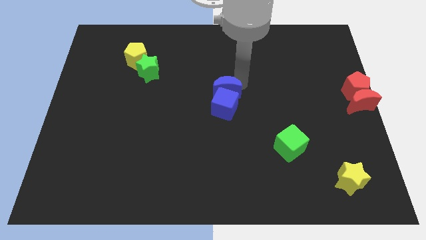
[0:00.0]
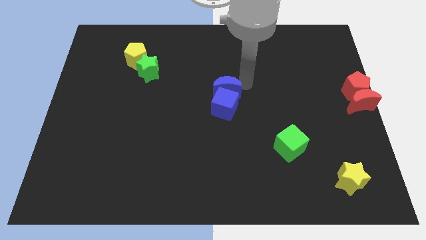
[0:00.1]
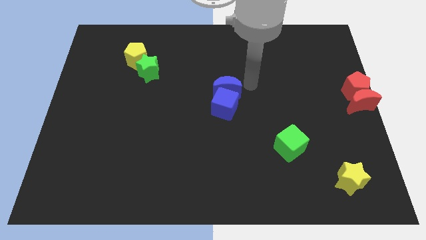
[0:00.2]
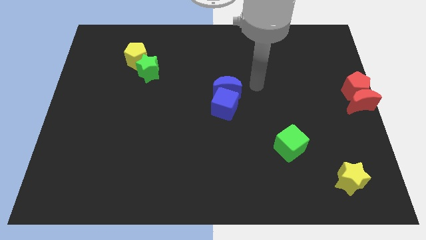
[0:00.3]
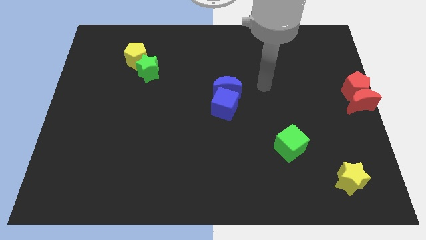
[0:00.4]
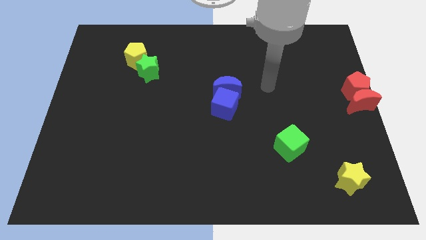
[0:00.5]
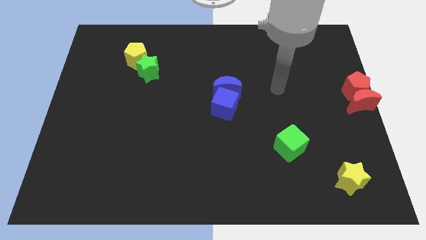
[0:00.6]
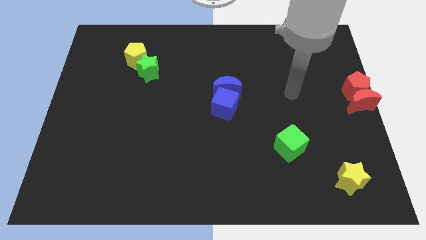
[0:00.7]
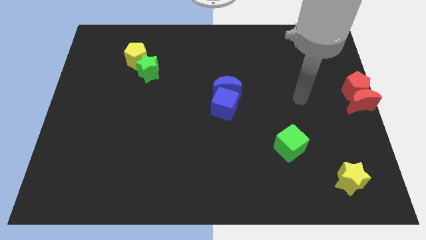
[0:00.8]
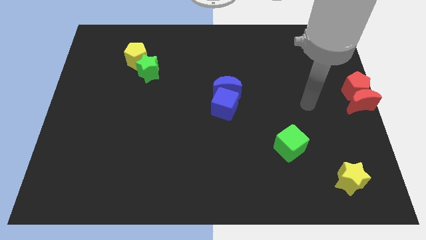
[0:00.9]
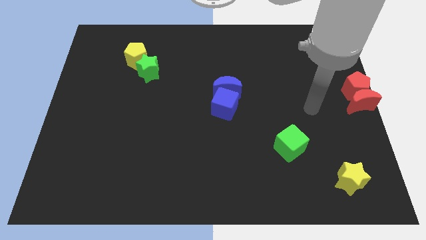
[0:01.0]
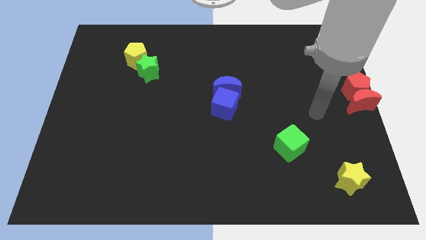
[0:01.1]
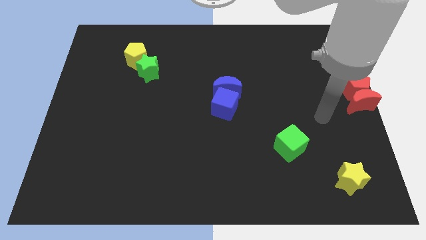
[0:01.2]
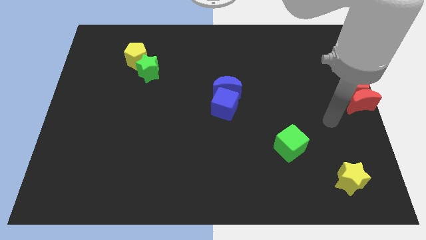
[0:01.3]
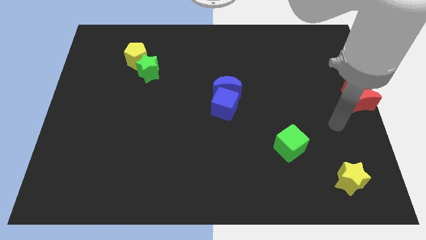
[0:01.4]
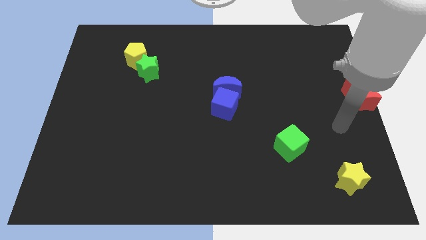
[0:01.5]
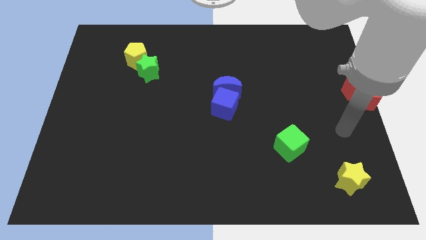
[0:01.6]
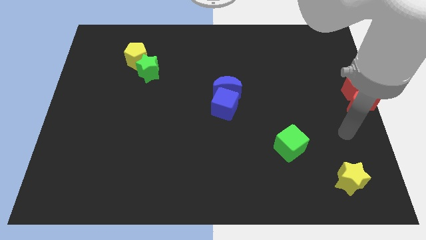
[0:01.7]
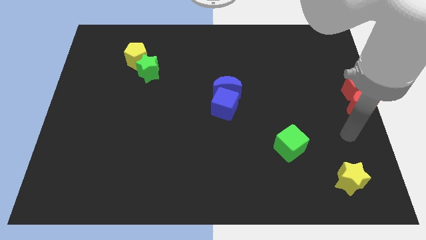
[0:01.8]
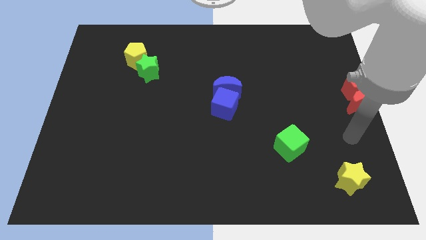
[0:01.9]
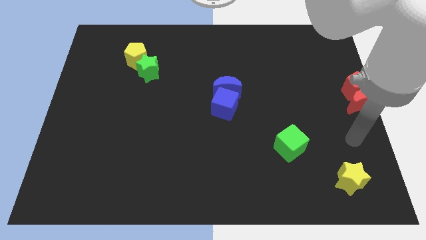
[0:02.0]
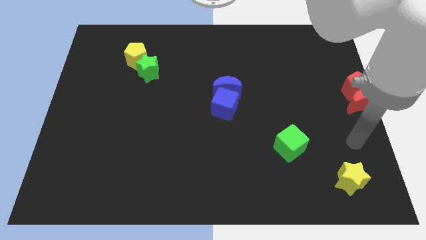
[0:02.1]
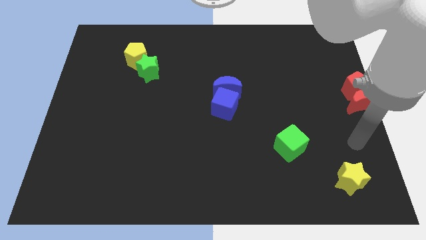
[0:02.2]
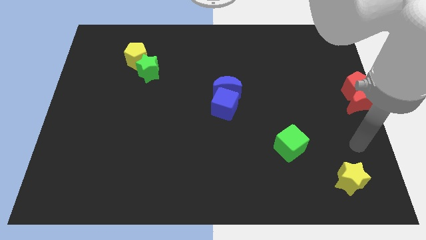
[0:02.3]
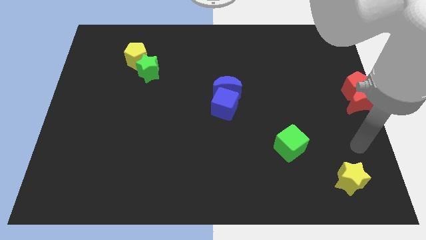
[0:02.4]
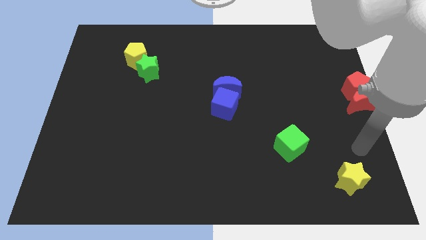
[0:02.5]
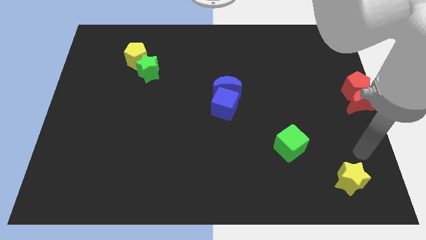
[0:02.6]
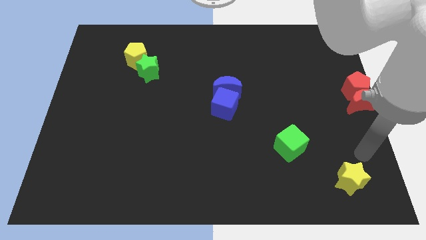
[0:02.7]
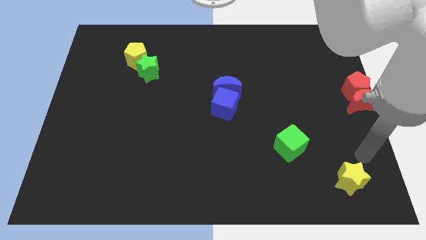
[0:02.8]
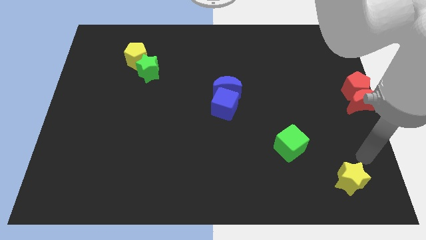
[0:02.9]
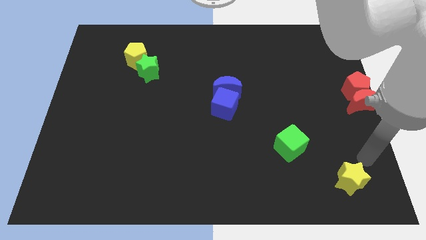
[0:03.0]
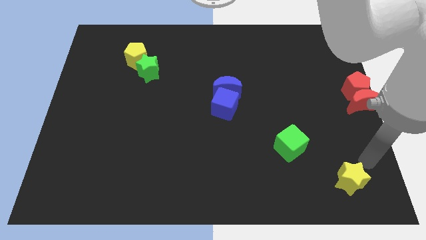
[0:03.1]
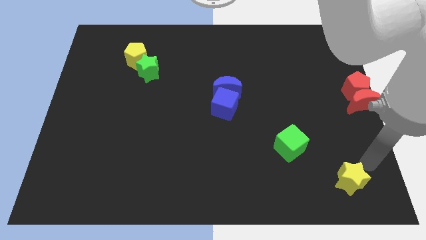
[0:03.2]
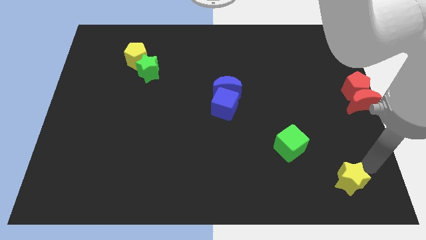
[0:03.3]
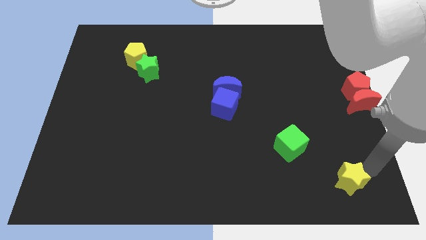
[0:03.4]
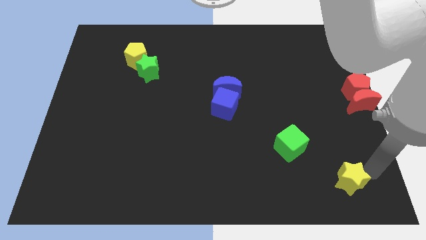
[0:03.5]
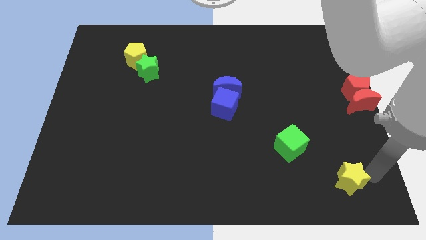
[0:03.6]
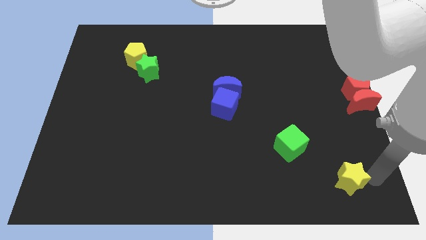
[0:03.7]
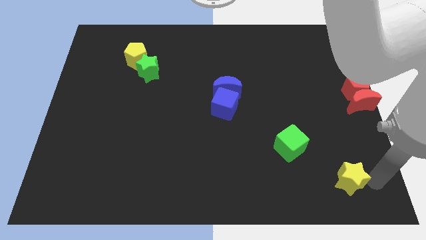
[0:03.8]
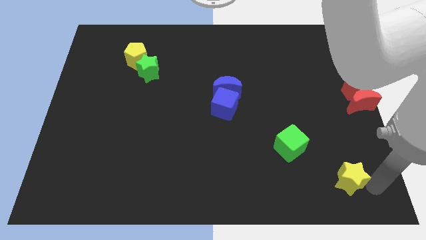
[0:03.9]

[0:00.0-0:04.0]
point your arm to the right side of yellow star

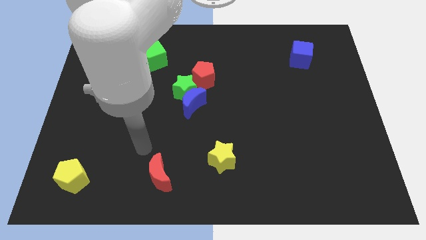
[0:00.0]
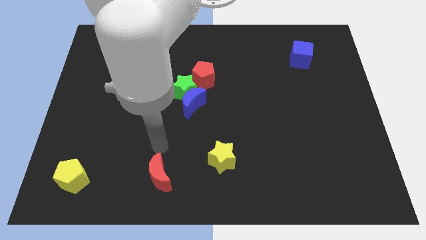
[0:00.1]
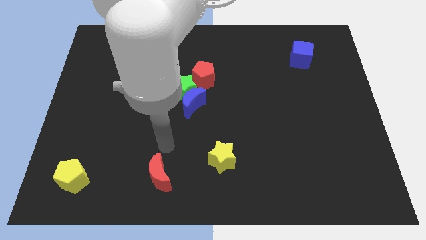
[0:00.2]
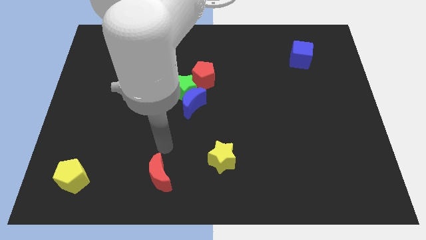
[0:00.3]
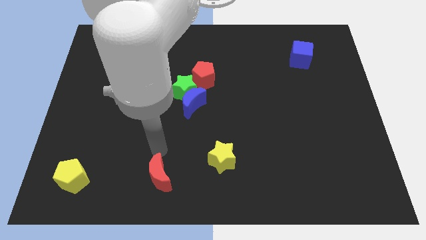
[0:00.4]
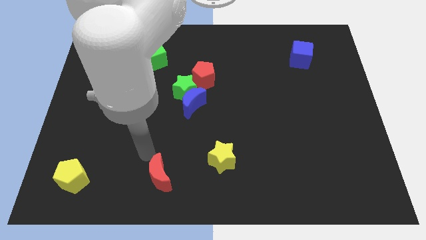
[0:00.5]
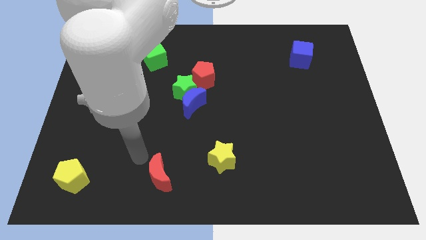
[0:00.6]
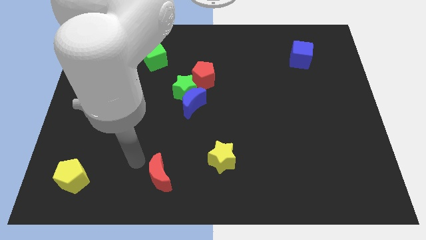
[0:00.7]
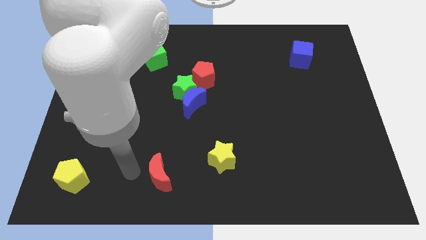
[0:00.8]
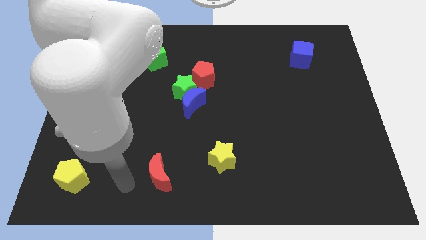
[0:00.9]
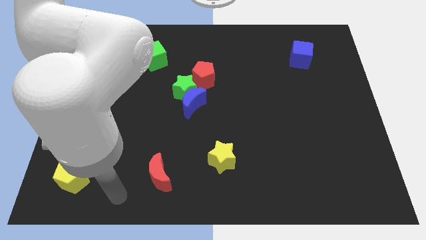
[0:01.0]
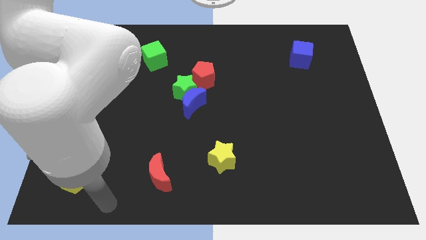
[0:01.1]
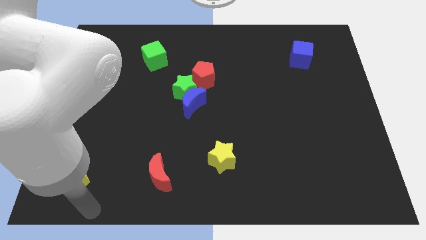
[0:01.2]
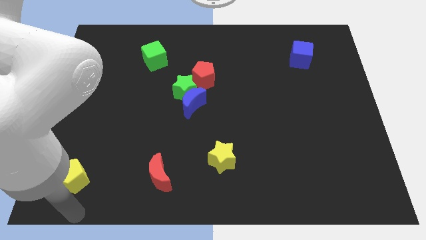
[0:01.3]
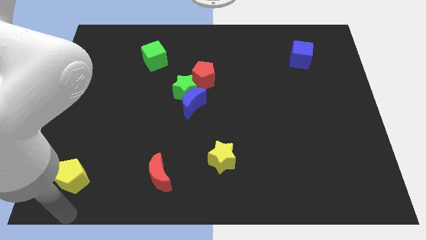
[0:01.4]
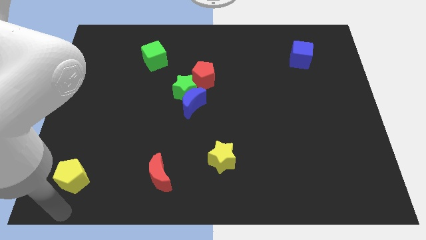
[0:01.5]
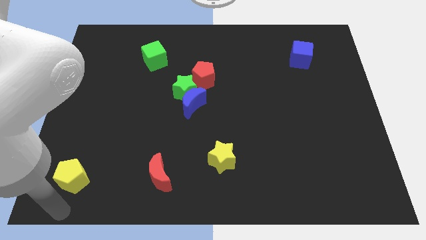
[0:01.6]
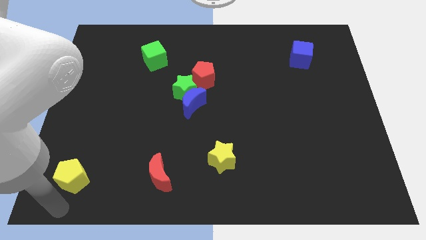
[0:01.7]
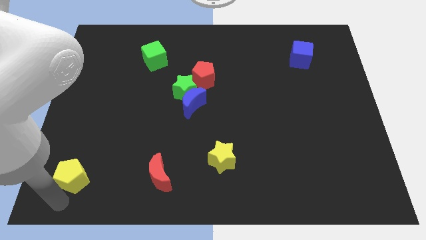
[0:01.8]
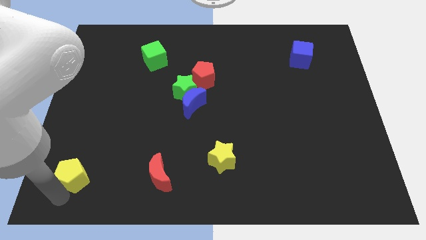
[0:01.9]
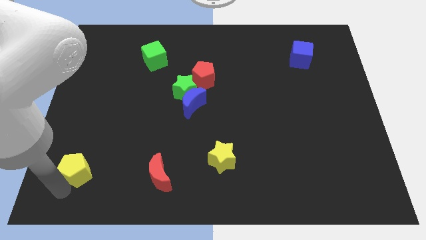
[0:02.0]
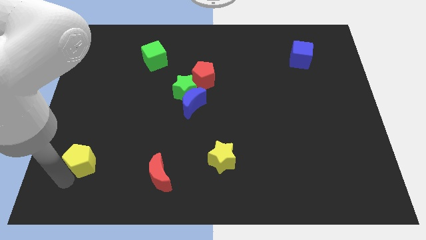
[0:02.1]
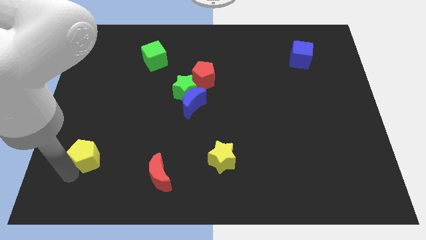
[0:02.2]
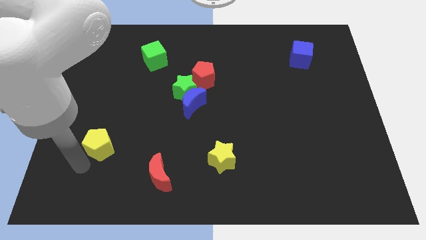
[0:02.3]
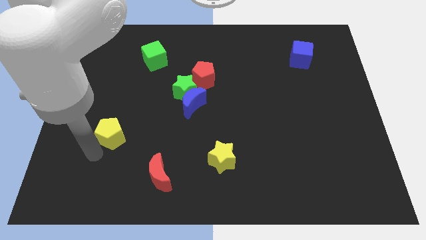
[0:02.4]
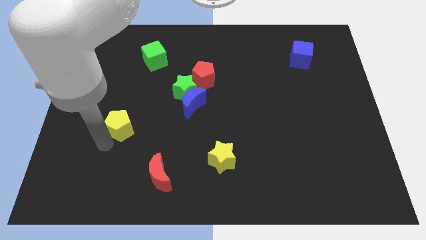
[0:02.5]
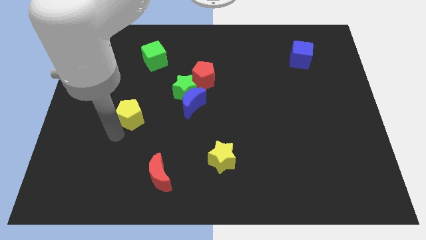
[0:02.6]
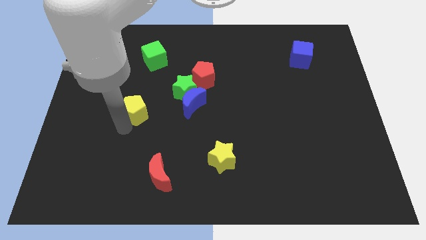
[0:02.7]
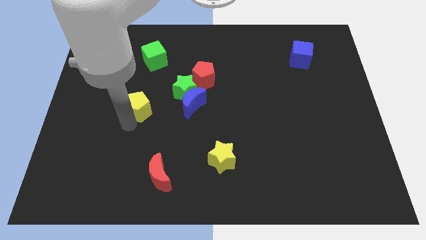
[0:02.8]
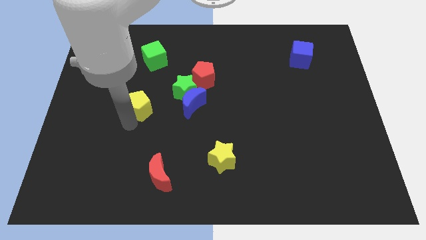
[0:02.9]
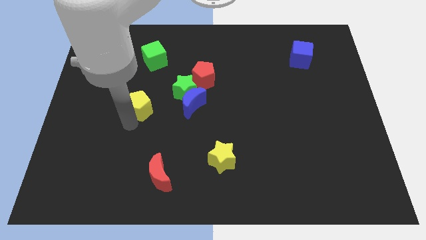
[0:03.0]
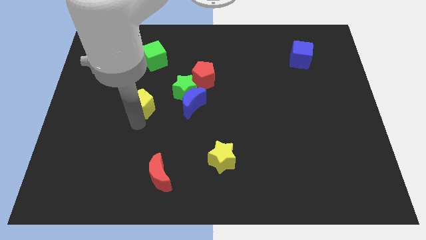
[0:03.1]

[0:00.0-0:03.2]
place yellow pentagon diagonally above red crescent

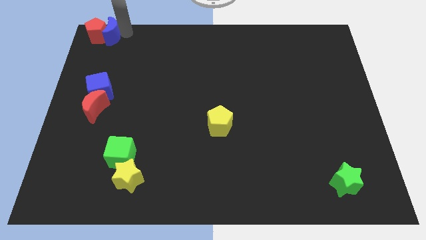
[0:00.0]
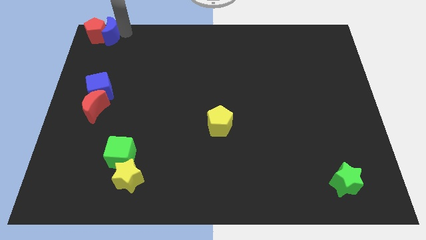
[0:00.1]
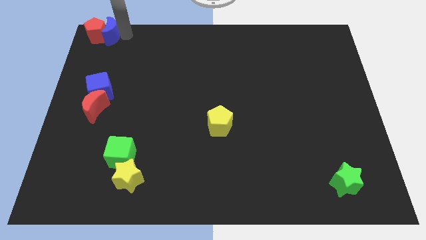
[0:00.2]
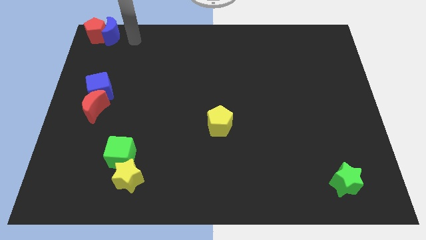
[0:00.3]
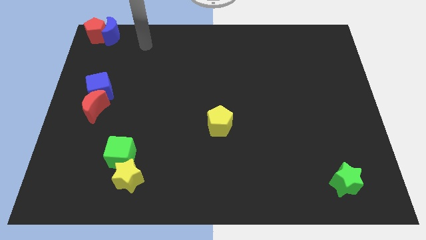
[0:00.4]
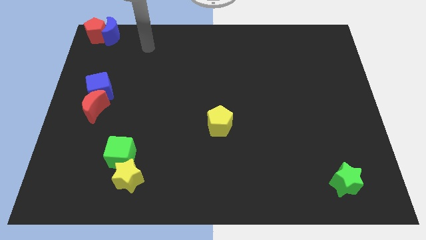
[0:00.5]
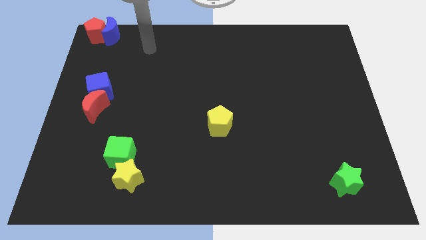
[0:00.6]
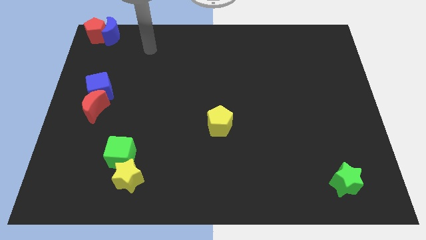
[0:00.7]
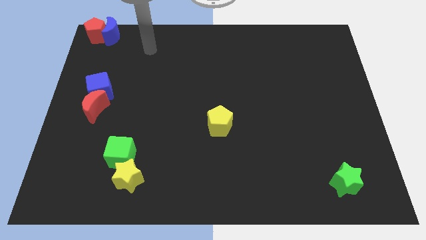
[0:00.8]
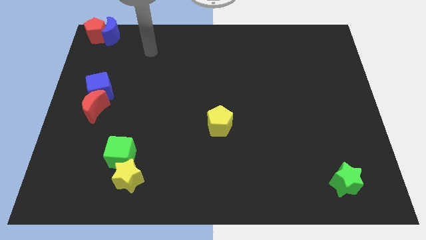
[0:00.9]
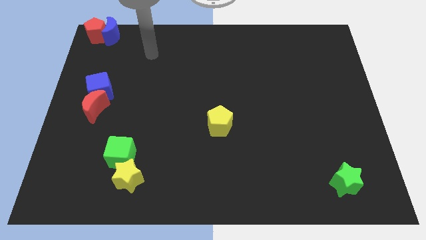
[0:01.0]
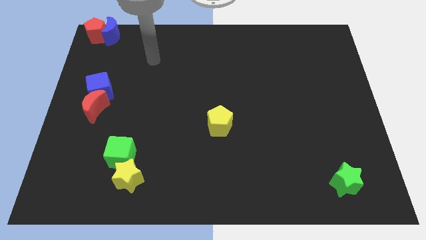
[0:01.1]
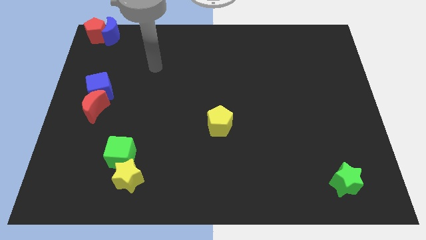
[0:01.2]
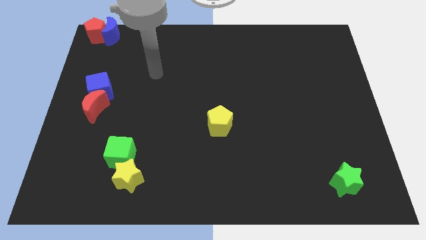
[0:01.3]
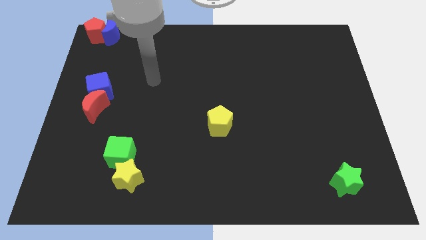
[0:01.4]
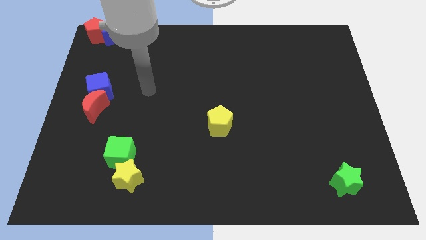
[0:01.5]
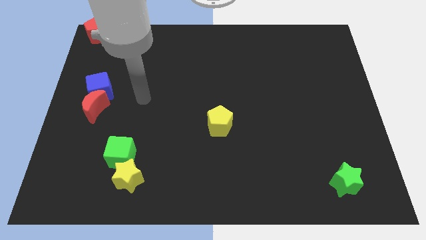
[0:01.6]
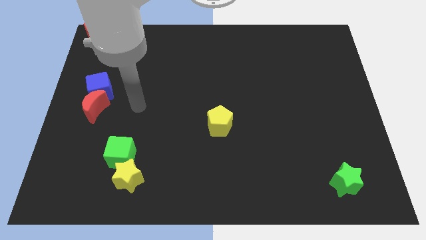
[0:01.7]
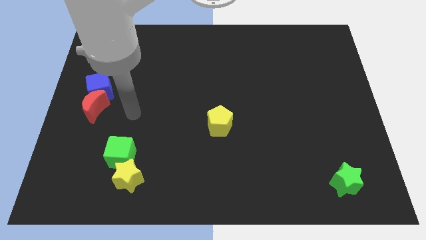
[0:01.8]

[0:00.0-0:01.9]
move your arm away from the blue moon

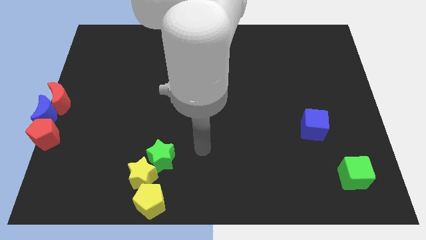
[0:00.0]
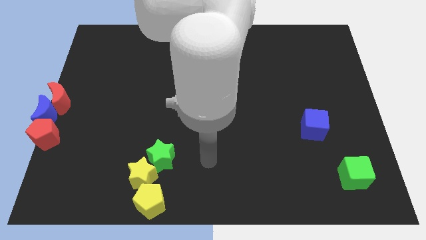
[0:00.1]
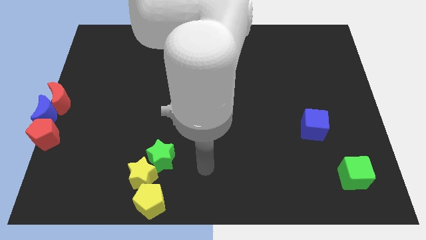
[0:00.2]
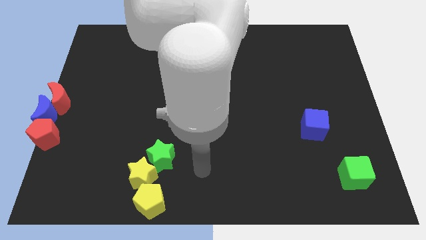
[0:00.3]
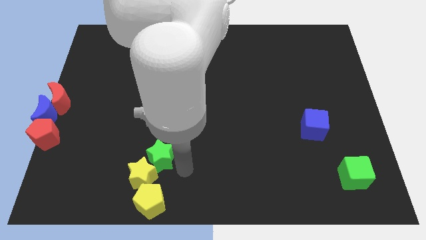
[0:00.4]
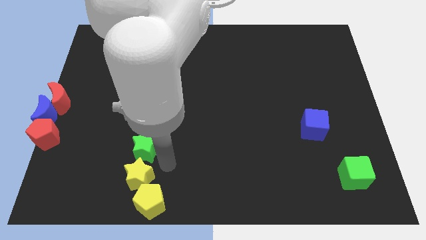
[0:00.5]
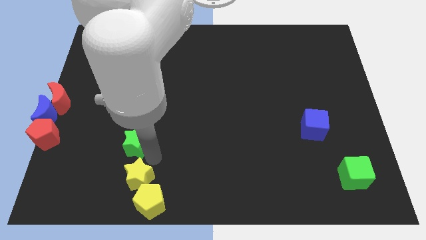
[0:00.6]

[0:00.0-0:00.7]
place the green star above the yellow star
